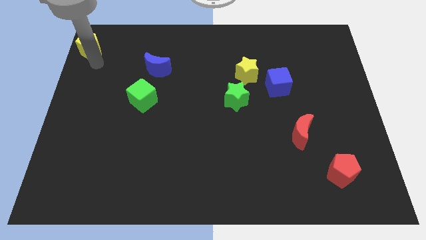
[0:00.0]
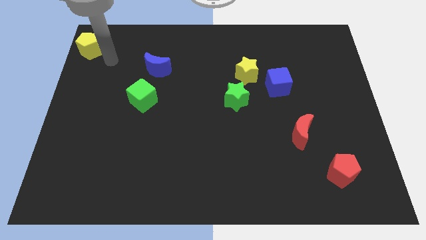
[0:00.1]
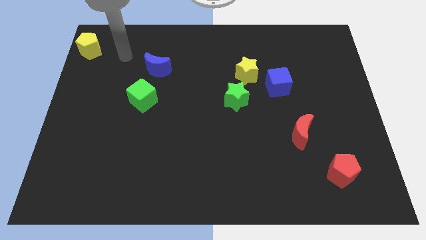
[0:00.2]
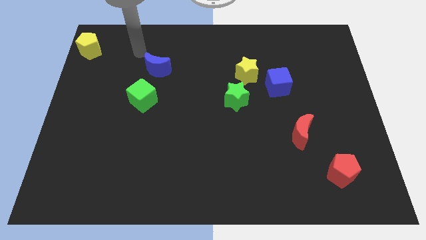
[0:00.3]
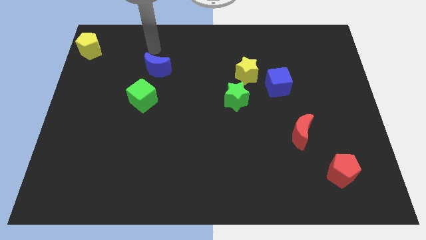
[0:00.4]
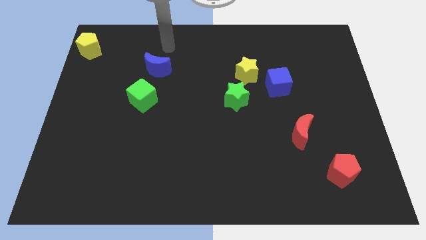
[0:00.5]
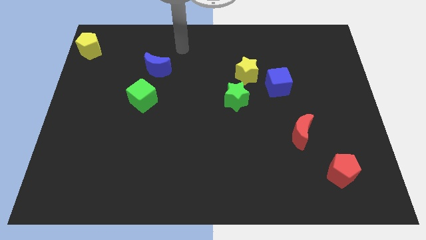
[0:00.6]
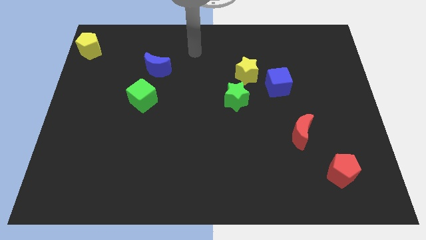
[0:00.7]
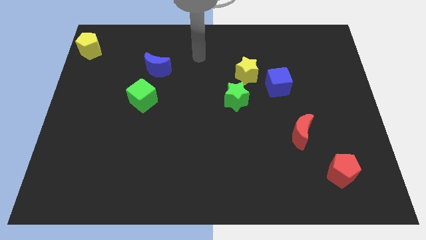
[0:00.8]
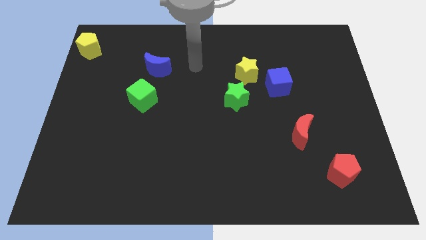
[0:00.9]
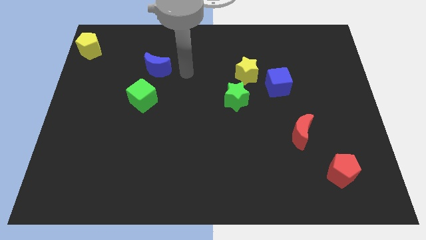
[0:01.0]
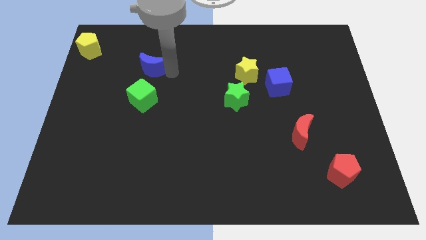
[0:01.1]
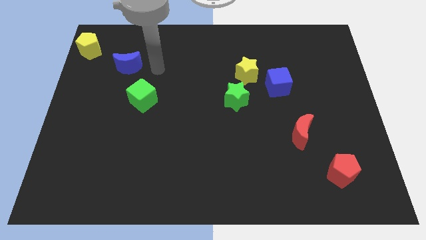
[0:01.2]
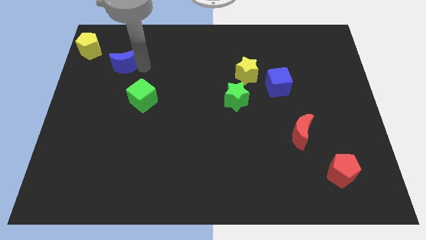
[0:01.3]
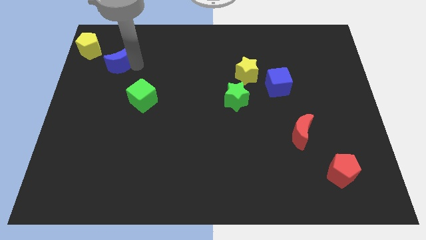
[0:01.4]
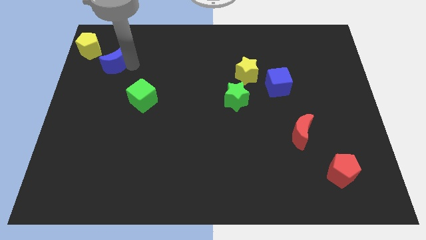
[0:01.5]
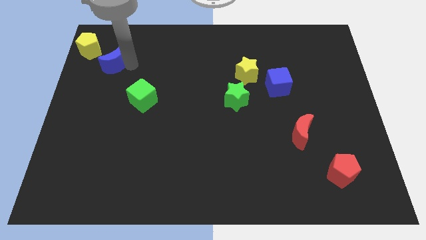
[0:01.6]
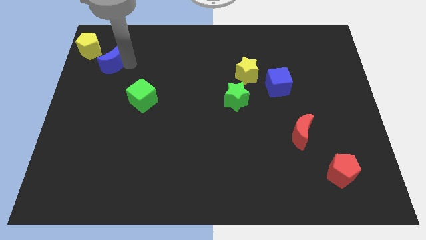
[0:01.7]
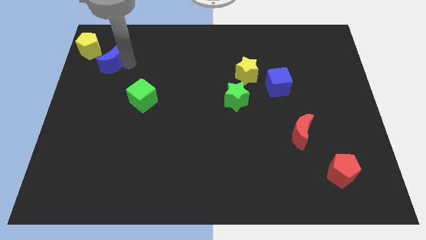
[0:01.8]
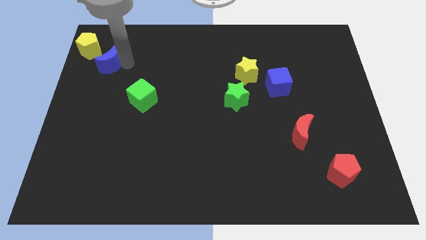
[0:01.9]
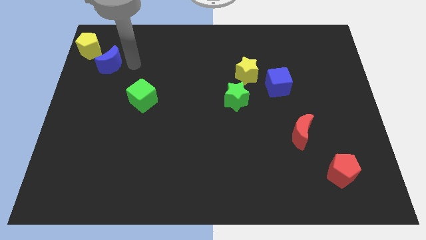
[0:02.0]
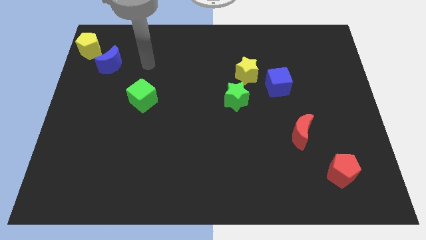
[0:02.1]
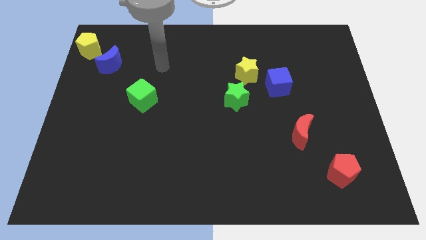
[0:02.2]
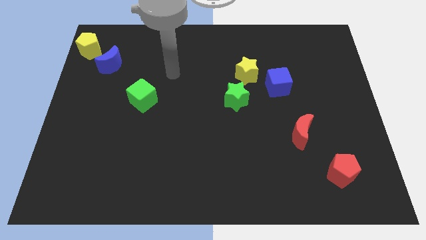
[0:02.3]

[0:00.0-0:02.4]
move the blue moon towards left

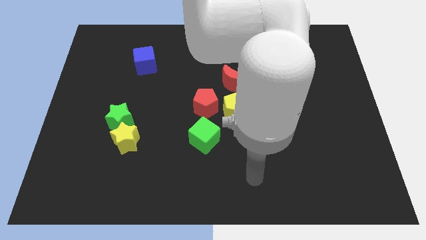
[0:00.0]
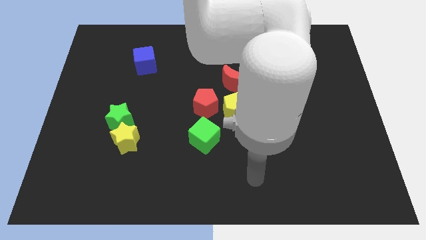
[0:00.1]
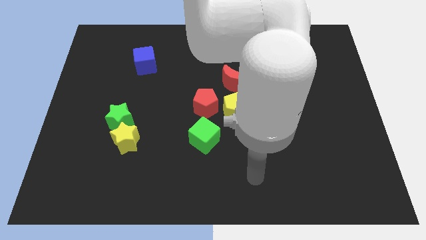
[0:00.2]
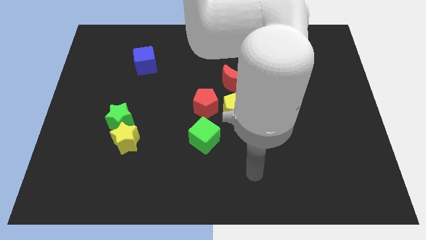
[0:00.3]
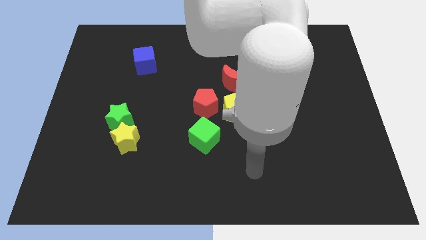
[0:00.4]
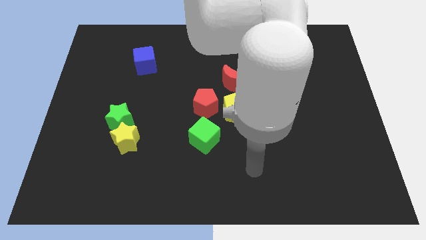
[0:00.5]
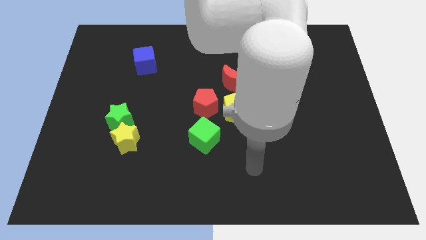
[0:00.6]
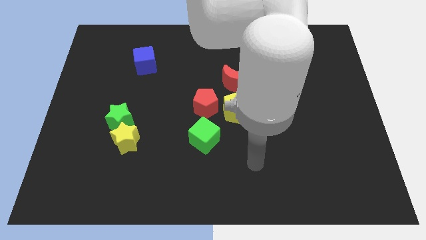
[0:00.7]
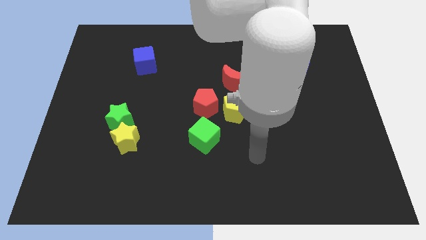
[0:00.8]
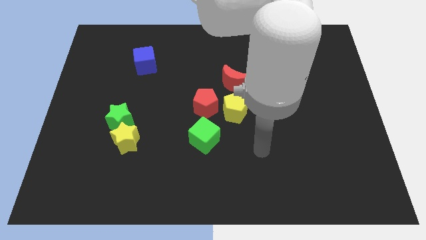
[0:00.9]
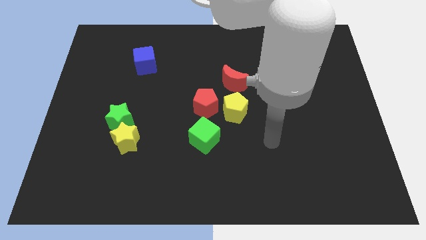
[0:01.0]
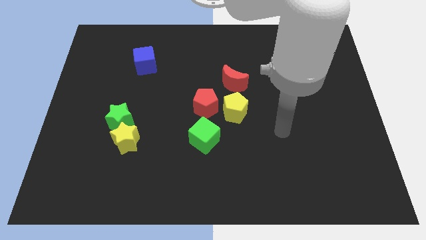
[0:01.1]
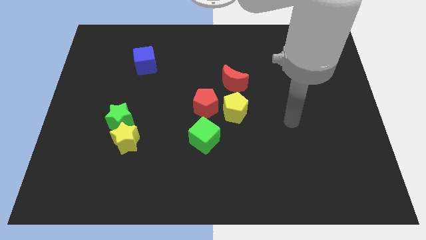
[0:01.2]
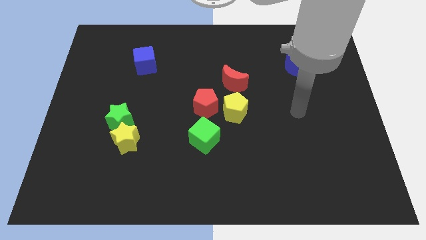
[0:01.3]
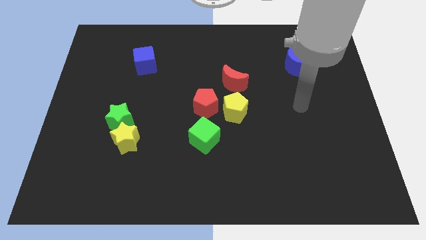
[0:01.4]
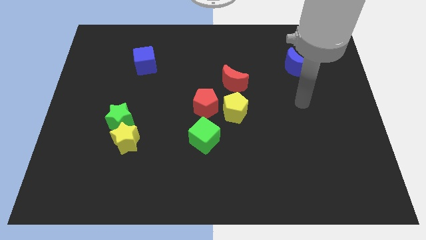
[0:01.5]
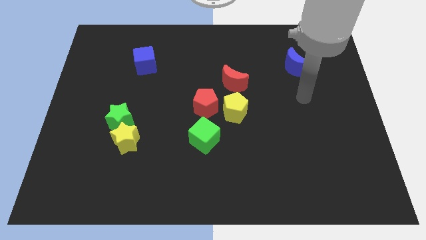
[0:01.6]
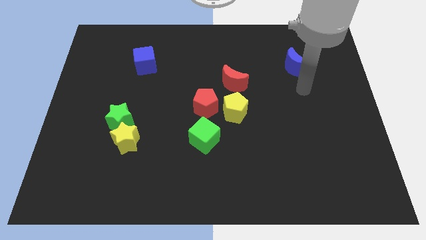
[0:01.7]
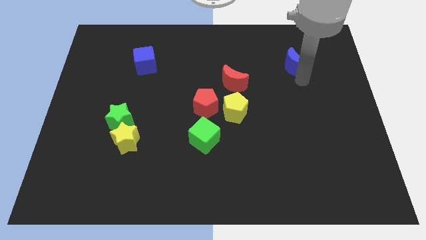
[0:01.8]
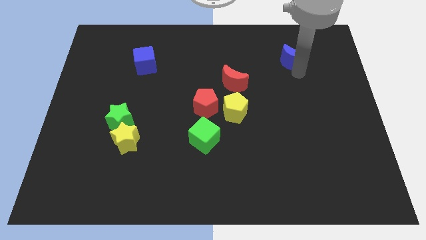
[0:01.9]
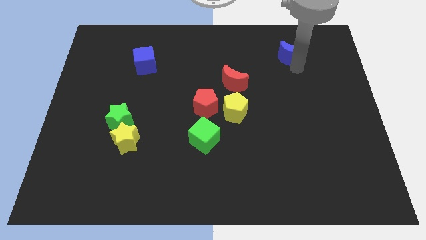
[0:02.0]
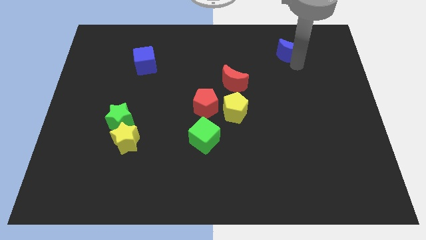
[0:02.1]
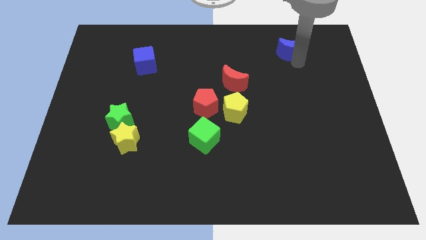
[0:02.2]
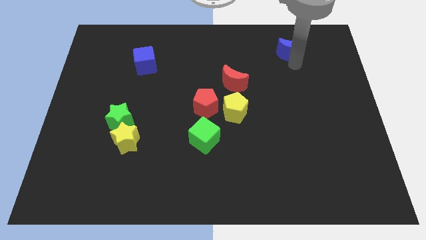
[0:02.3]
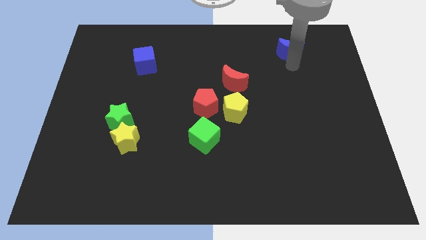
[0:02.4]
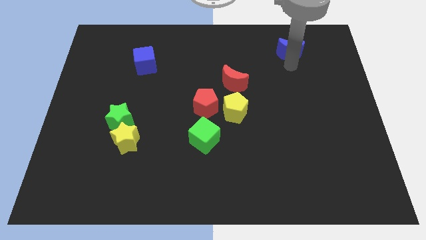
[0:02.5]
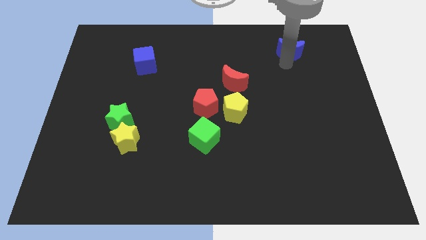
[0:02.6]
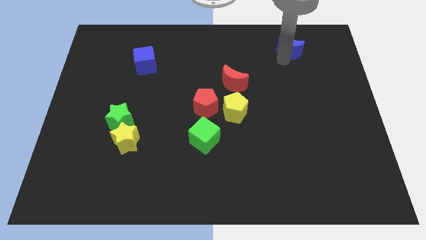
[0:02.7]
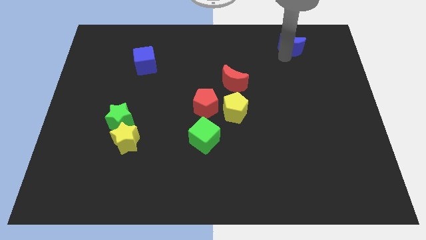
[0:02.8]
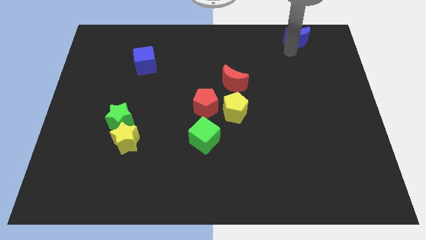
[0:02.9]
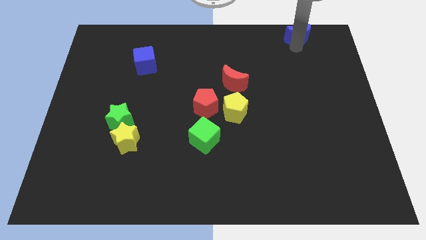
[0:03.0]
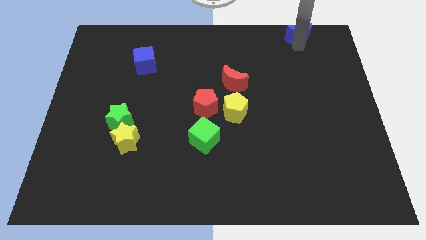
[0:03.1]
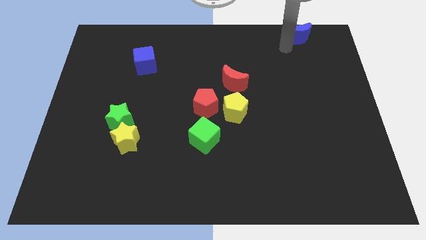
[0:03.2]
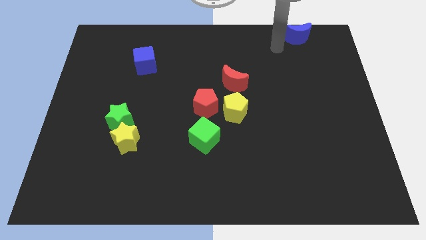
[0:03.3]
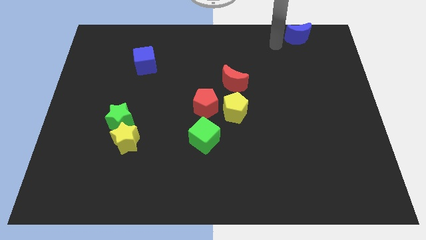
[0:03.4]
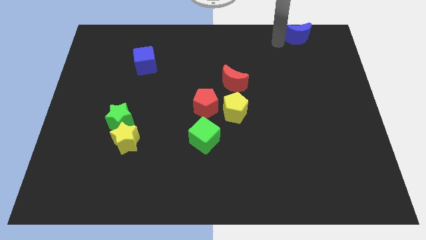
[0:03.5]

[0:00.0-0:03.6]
move the arm towards the top of the board

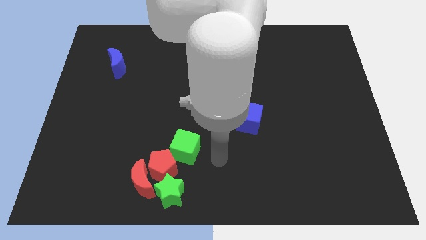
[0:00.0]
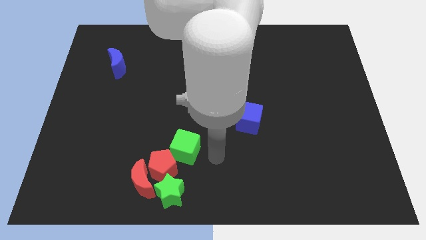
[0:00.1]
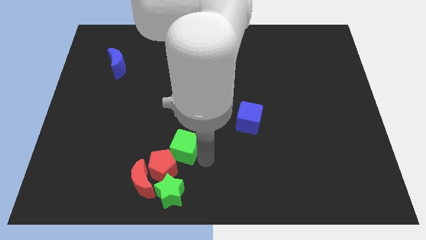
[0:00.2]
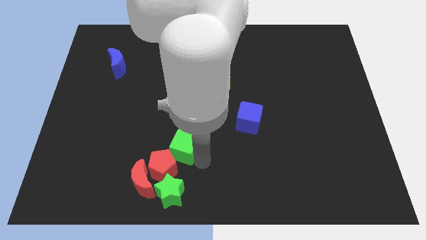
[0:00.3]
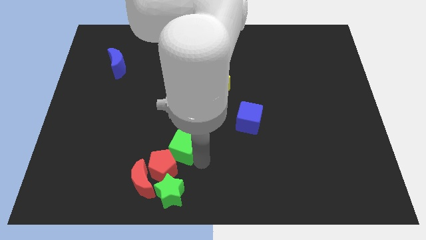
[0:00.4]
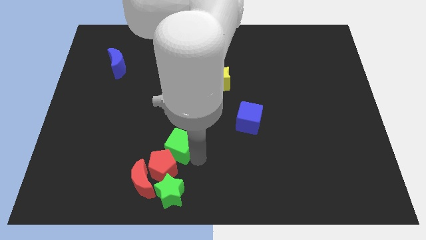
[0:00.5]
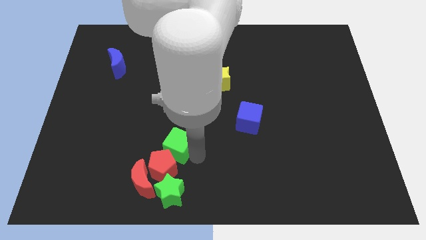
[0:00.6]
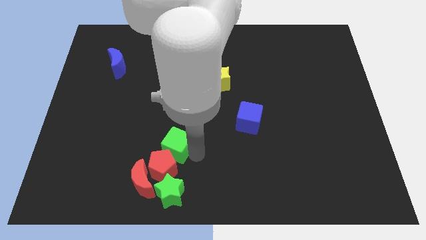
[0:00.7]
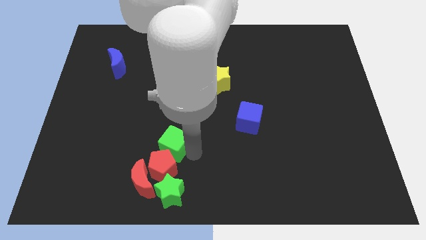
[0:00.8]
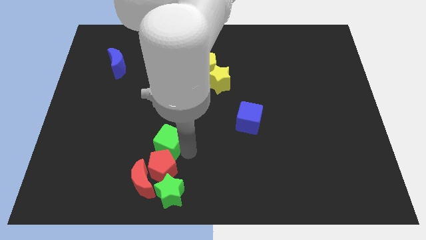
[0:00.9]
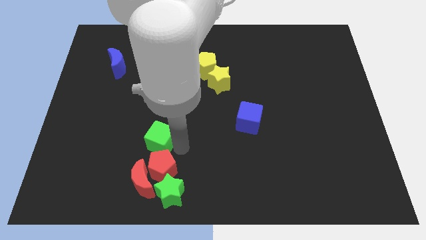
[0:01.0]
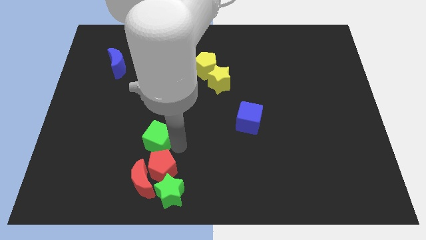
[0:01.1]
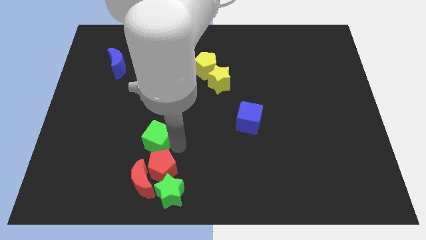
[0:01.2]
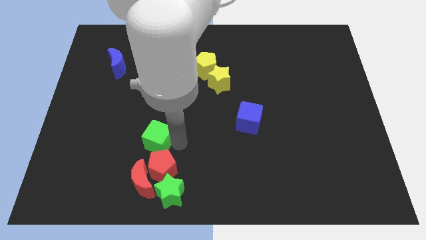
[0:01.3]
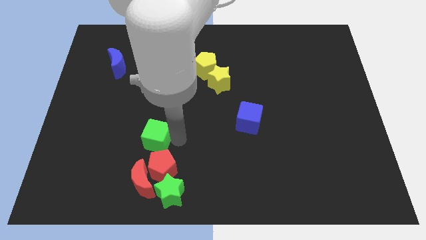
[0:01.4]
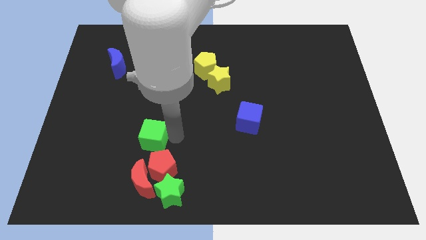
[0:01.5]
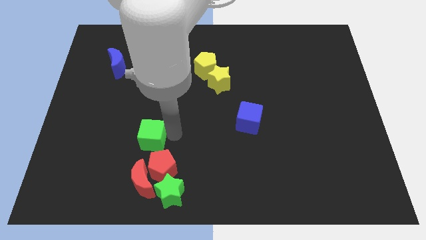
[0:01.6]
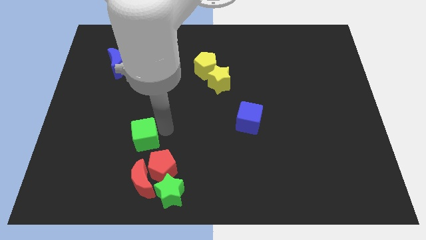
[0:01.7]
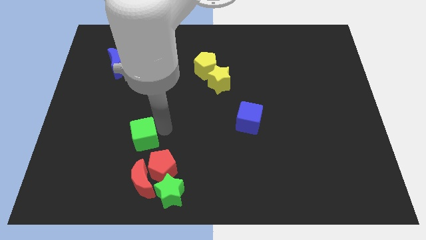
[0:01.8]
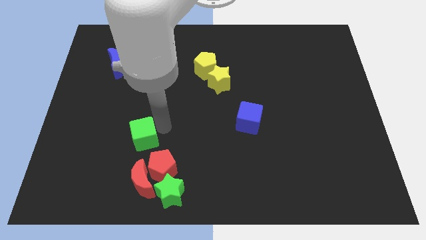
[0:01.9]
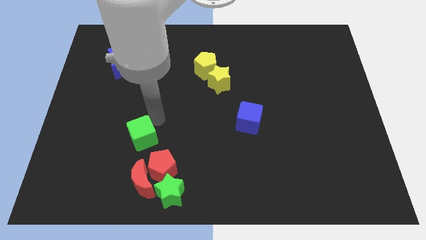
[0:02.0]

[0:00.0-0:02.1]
move the green cube to the top side of the red crescent

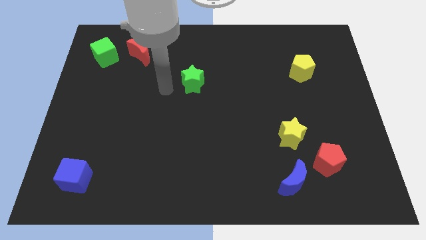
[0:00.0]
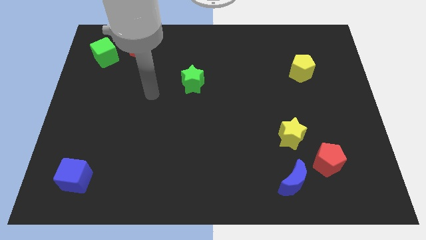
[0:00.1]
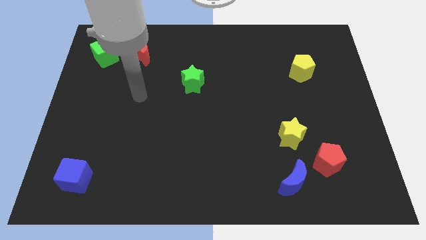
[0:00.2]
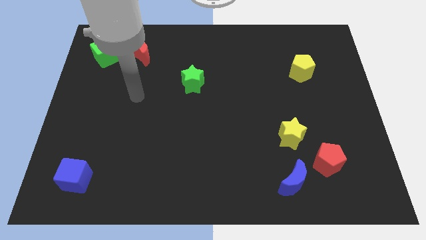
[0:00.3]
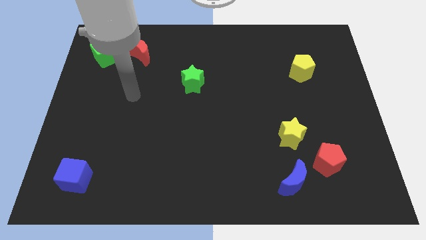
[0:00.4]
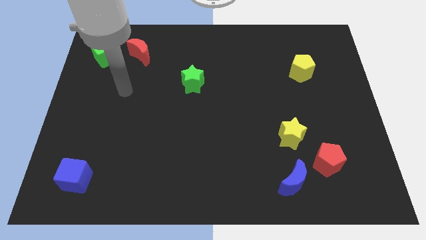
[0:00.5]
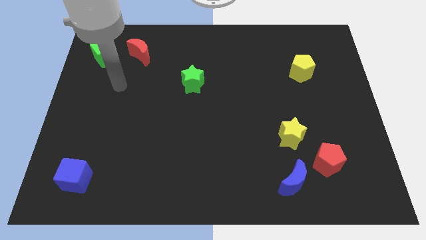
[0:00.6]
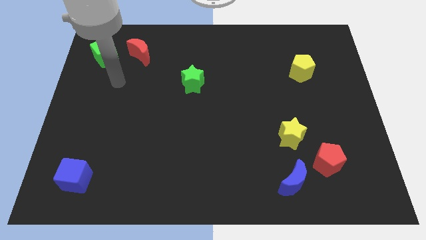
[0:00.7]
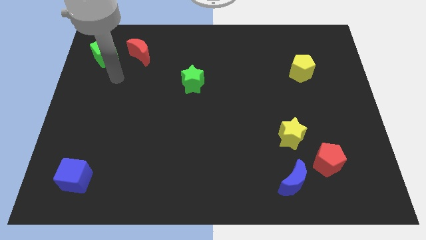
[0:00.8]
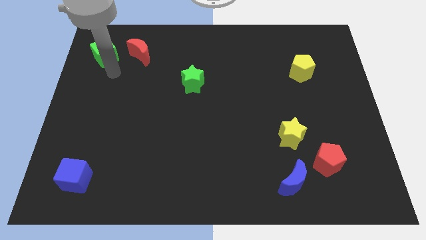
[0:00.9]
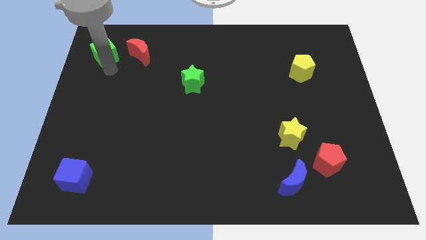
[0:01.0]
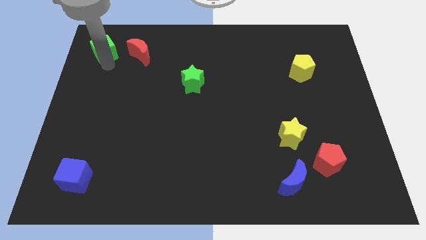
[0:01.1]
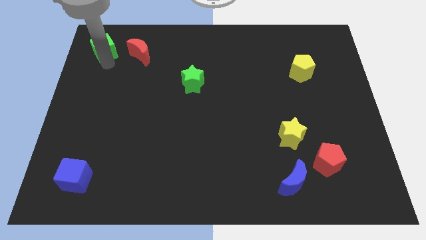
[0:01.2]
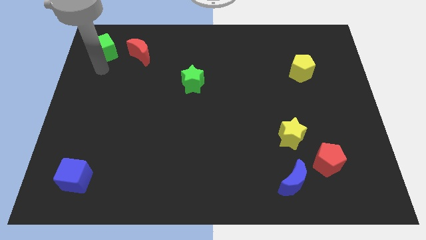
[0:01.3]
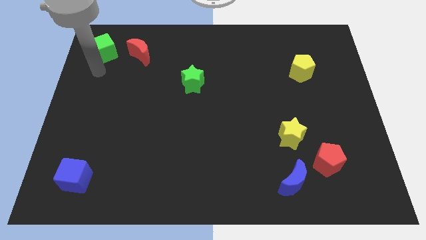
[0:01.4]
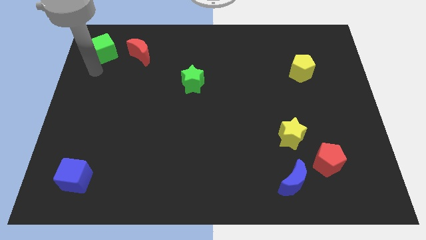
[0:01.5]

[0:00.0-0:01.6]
place your hand below the green cube
